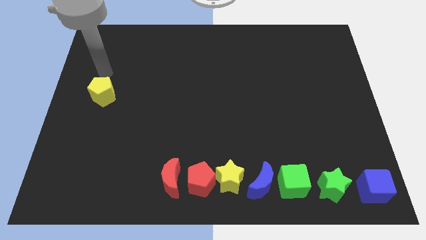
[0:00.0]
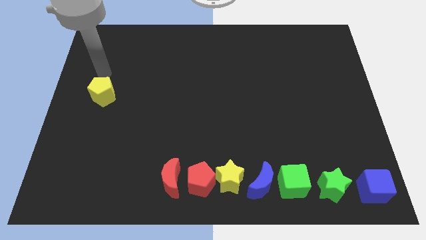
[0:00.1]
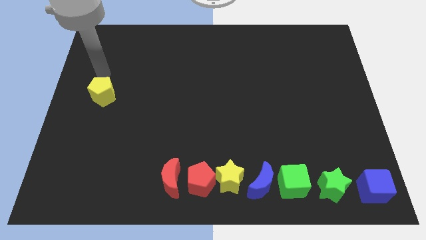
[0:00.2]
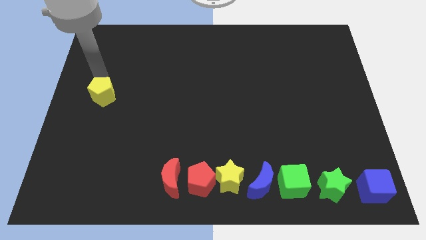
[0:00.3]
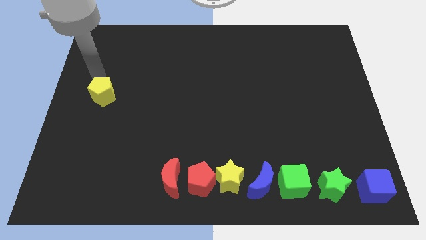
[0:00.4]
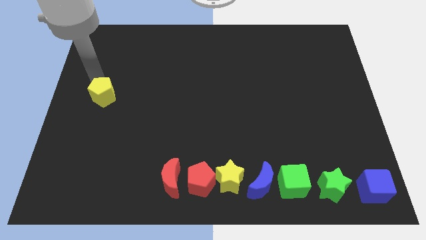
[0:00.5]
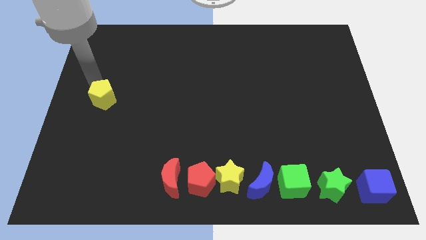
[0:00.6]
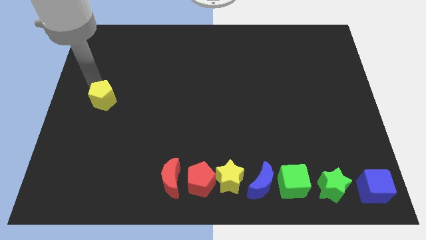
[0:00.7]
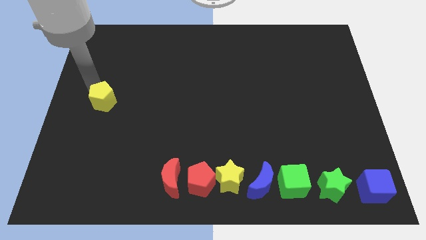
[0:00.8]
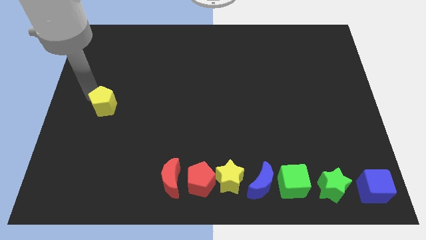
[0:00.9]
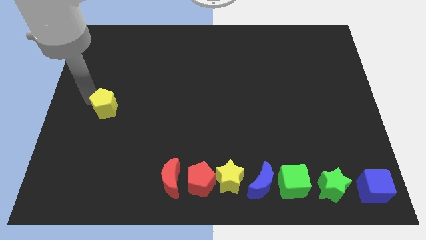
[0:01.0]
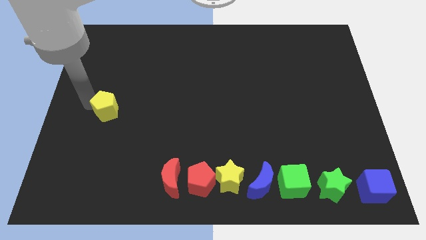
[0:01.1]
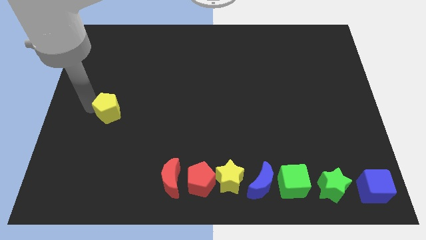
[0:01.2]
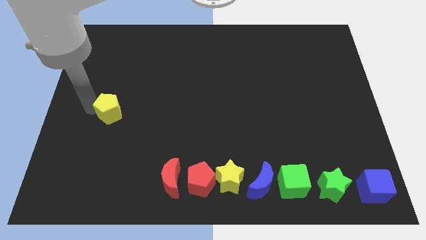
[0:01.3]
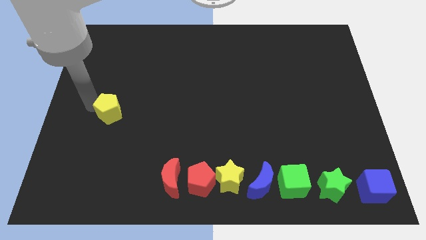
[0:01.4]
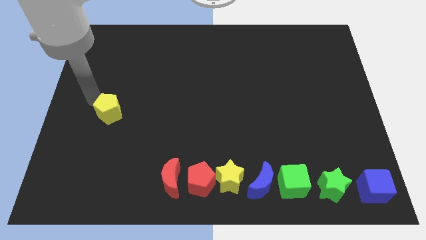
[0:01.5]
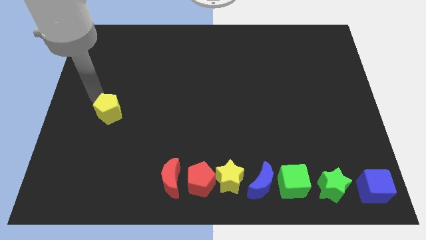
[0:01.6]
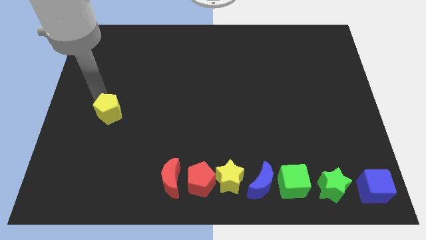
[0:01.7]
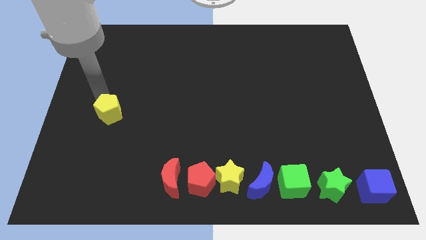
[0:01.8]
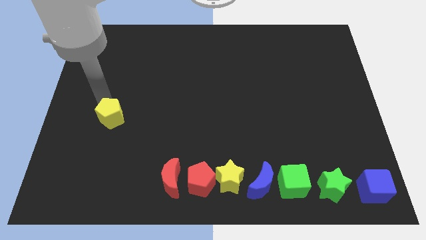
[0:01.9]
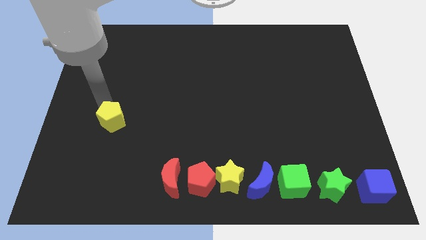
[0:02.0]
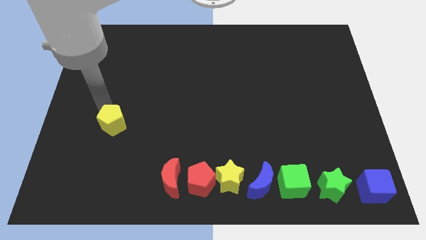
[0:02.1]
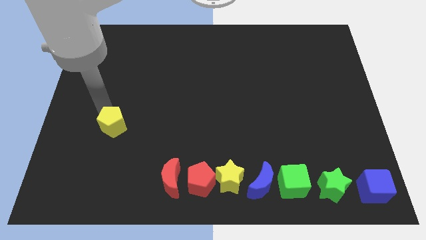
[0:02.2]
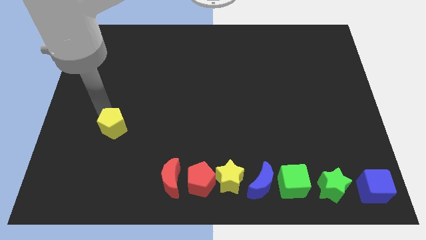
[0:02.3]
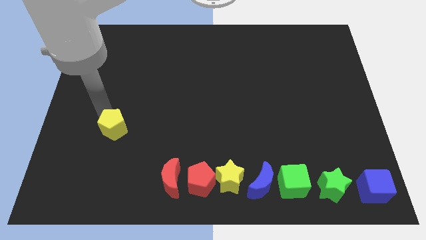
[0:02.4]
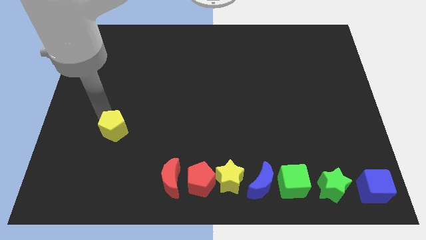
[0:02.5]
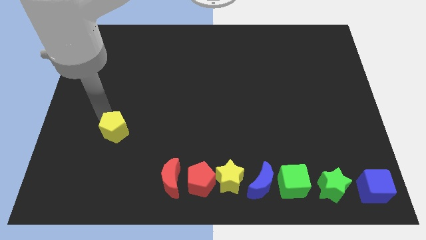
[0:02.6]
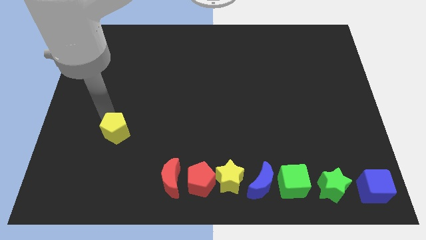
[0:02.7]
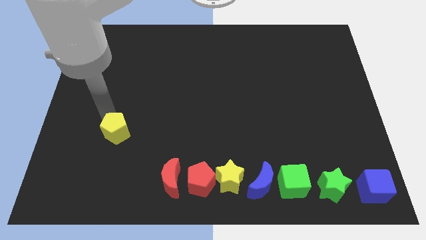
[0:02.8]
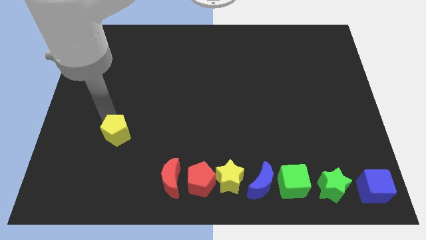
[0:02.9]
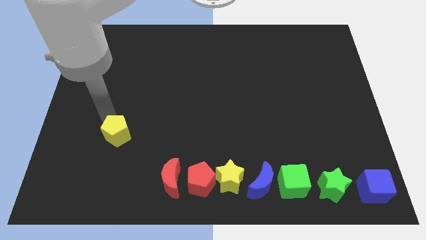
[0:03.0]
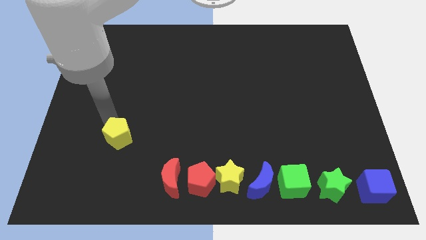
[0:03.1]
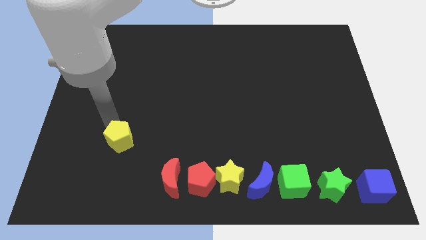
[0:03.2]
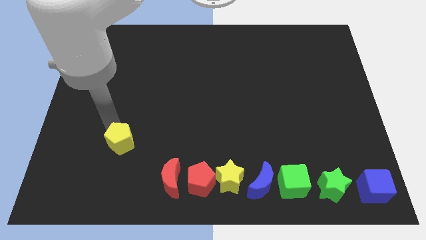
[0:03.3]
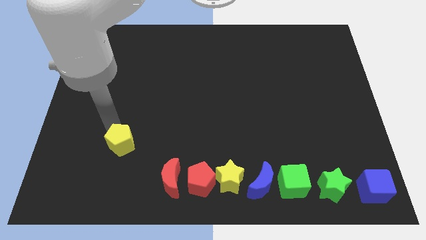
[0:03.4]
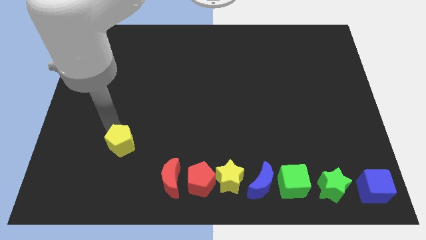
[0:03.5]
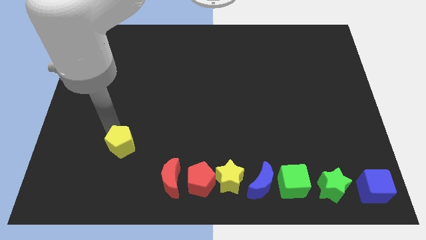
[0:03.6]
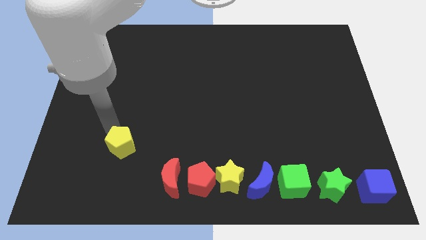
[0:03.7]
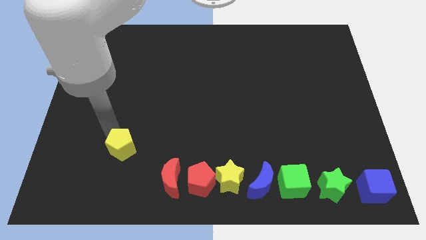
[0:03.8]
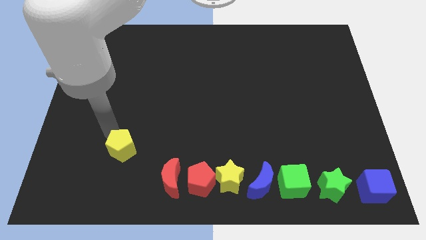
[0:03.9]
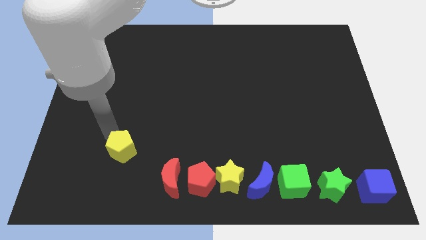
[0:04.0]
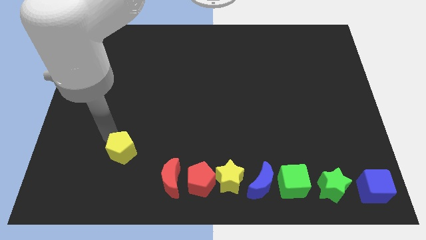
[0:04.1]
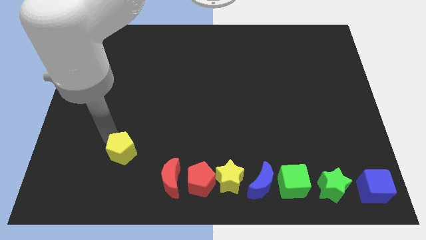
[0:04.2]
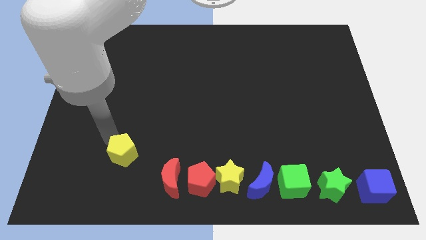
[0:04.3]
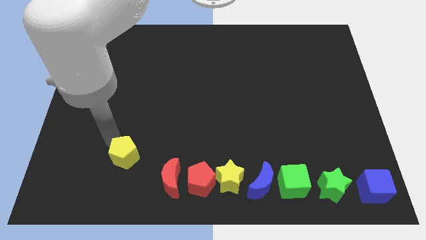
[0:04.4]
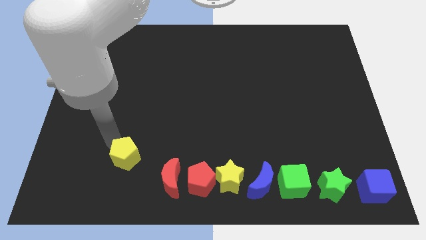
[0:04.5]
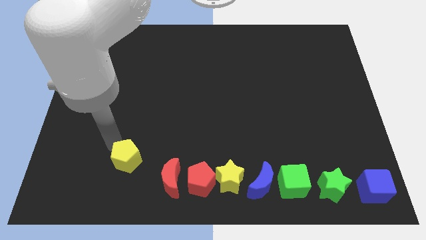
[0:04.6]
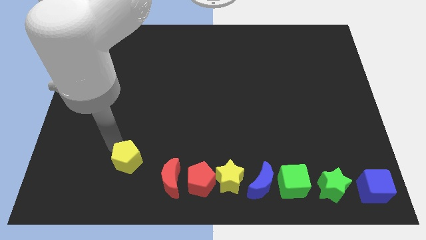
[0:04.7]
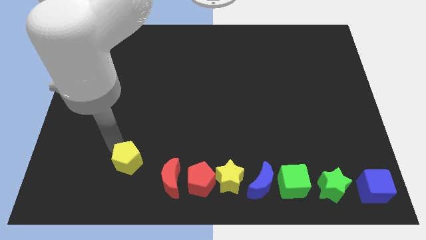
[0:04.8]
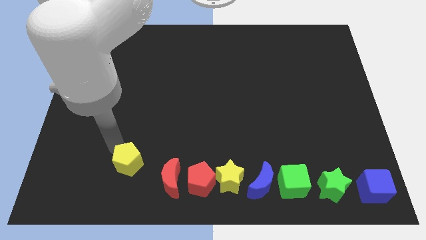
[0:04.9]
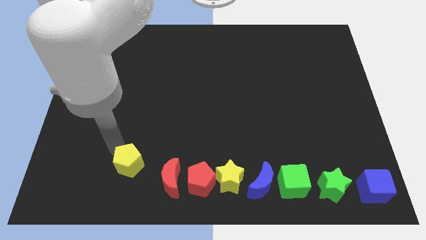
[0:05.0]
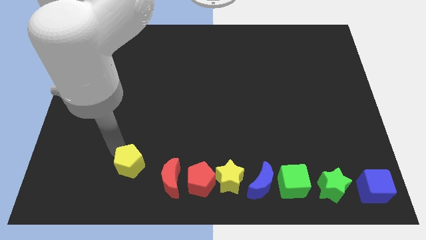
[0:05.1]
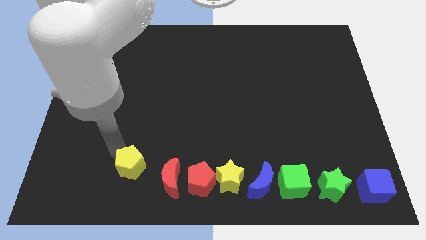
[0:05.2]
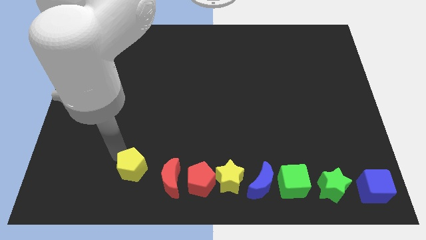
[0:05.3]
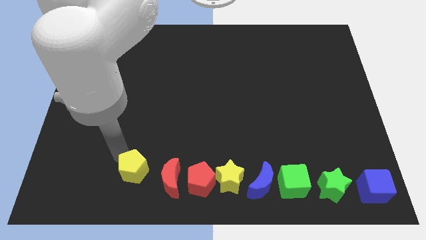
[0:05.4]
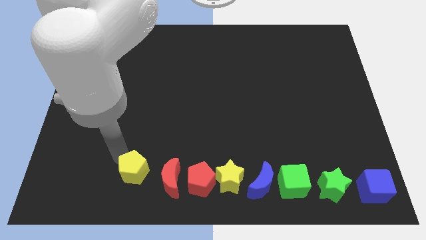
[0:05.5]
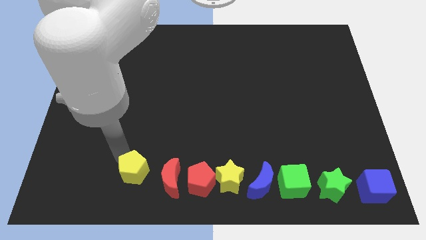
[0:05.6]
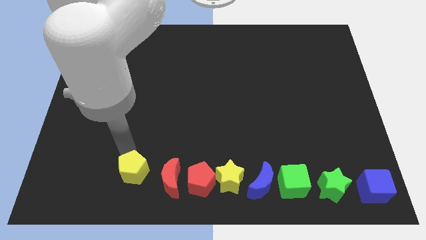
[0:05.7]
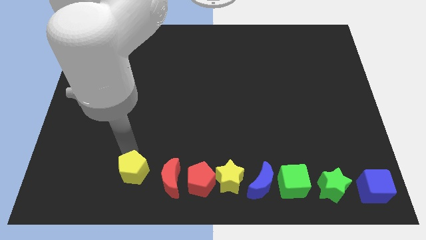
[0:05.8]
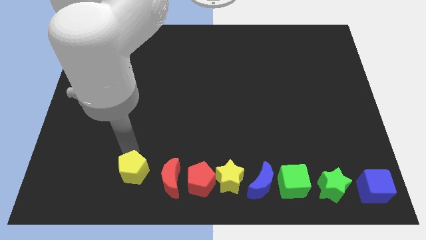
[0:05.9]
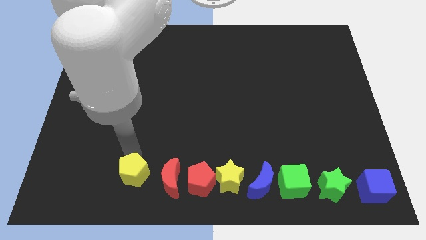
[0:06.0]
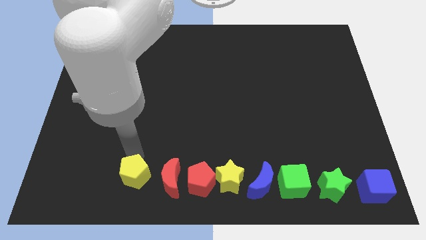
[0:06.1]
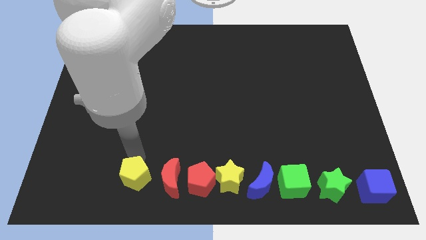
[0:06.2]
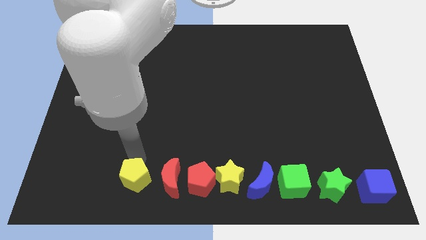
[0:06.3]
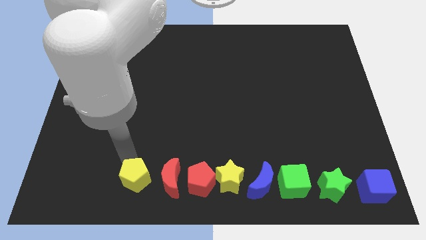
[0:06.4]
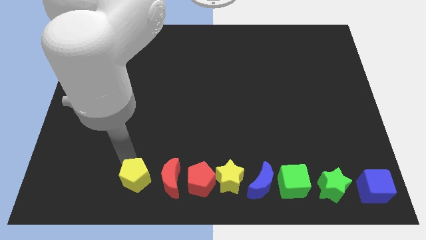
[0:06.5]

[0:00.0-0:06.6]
move yellow pentagon to the left of red crescent

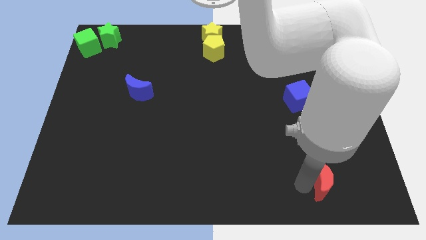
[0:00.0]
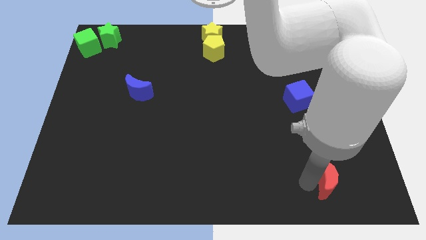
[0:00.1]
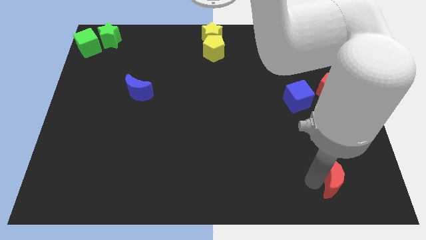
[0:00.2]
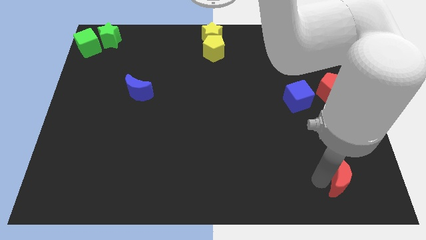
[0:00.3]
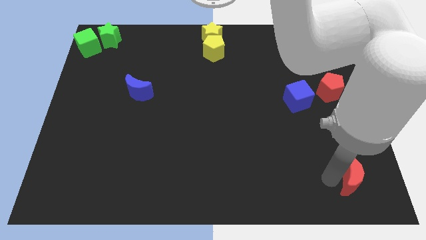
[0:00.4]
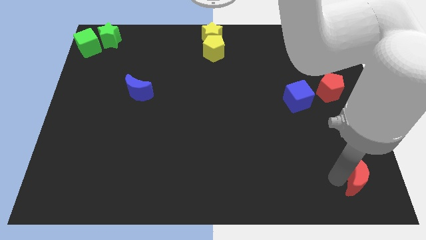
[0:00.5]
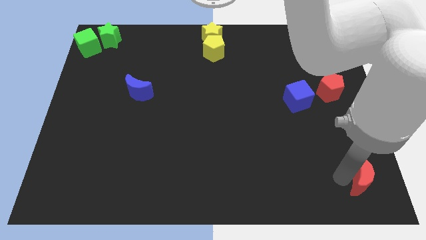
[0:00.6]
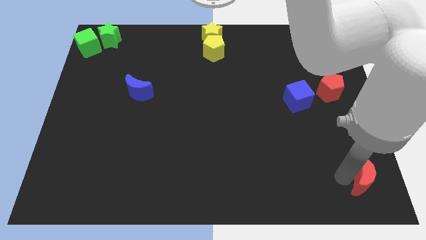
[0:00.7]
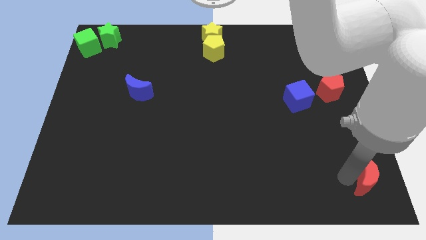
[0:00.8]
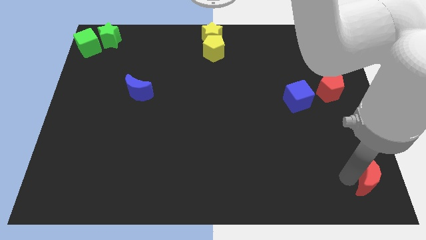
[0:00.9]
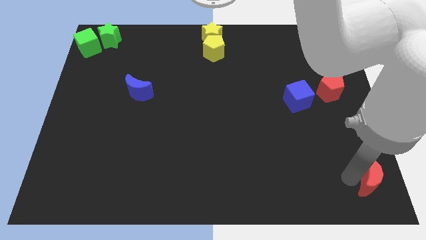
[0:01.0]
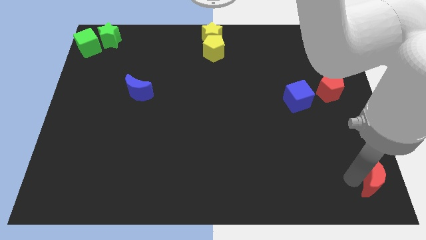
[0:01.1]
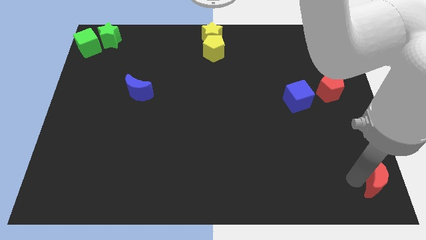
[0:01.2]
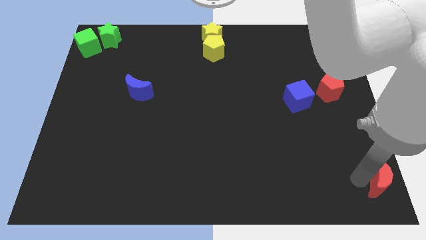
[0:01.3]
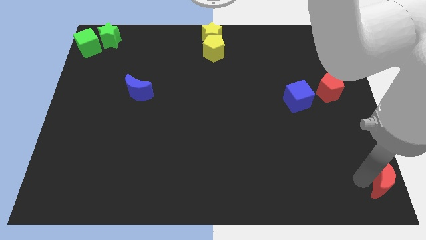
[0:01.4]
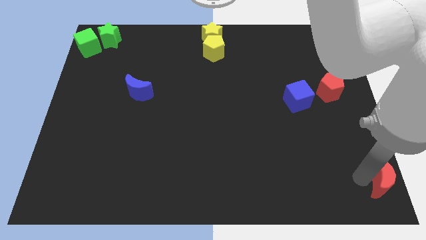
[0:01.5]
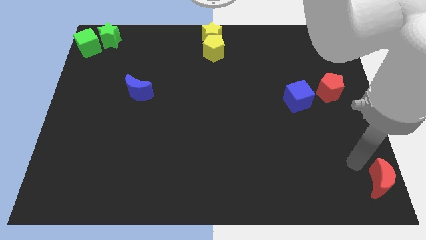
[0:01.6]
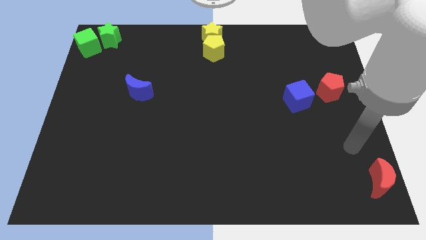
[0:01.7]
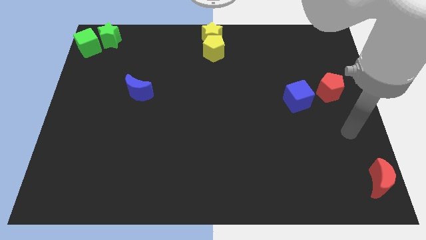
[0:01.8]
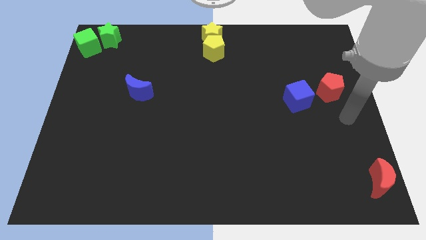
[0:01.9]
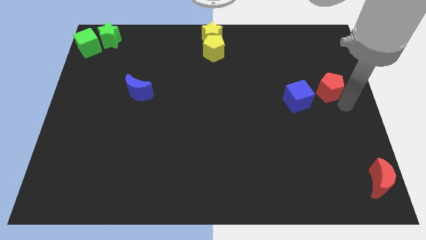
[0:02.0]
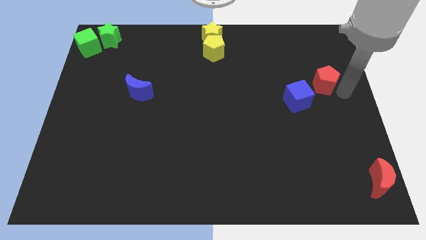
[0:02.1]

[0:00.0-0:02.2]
slide red moon towards bottom right

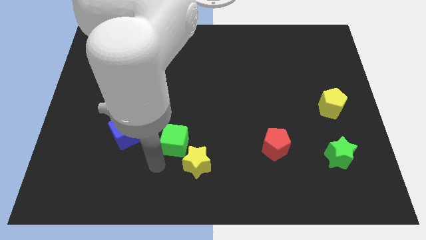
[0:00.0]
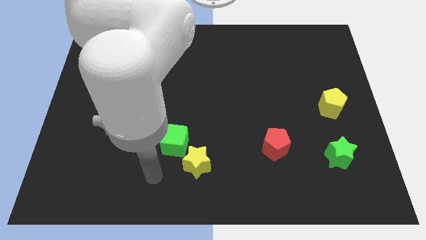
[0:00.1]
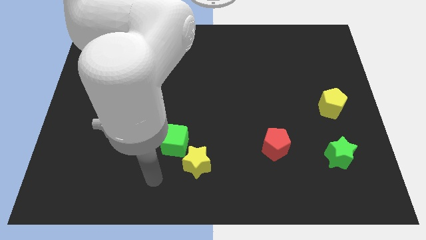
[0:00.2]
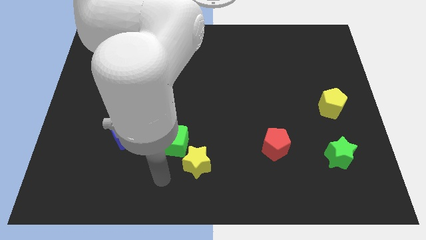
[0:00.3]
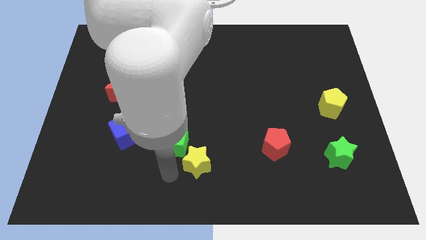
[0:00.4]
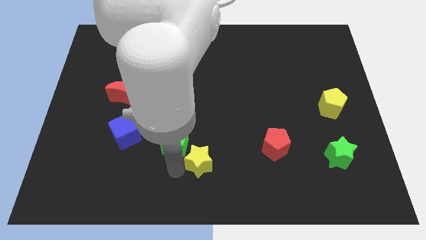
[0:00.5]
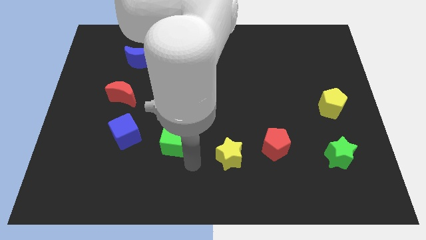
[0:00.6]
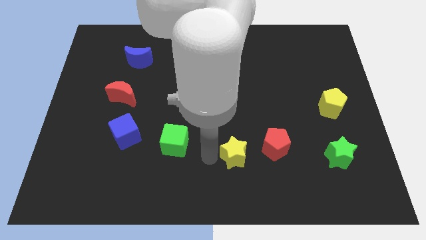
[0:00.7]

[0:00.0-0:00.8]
put yellow star in between red pentagon and green cube
